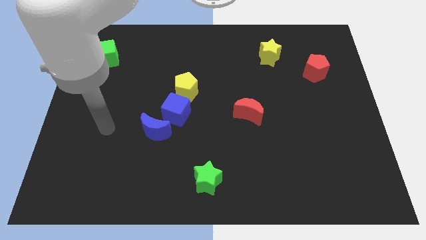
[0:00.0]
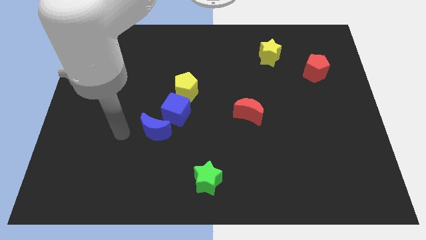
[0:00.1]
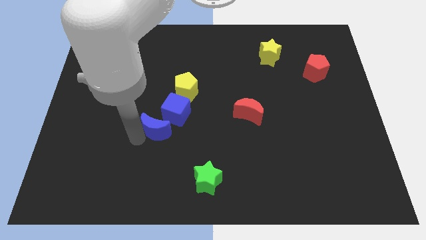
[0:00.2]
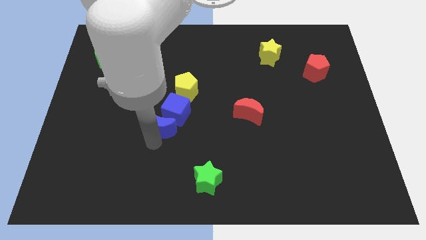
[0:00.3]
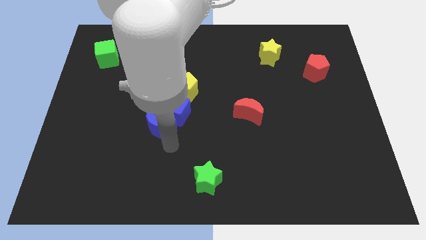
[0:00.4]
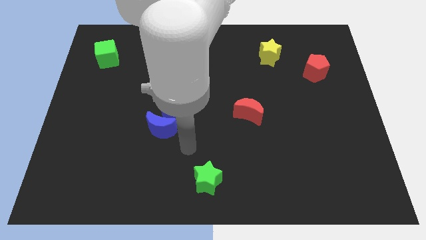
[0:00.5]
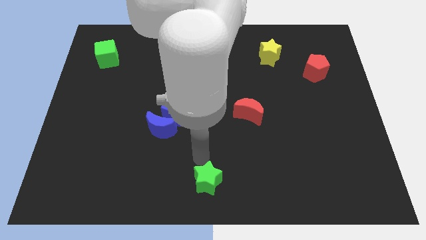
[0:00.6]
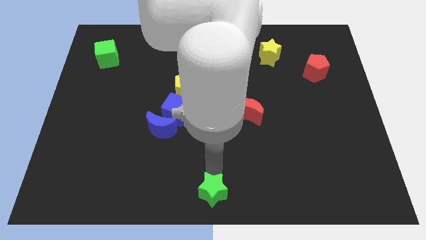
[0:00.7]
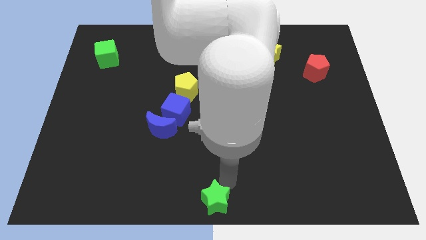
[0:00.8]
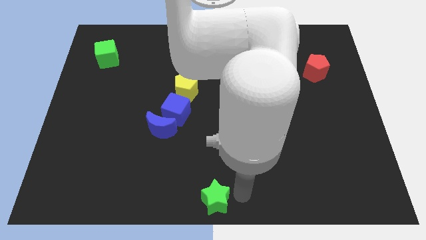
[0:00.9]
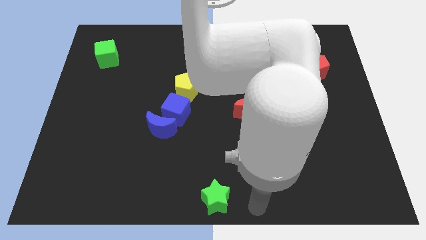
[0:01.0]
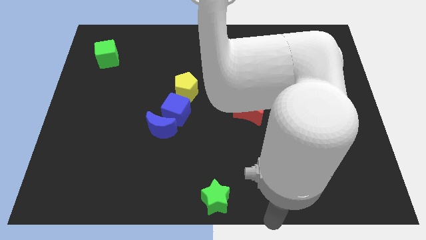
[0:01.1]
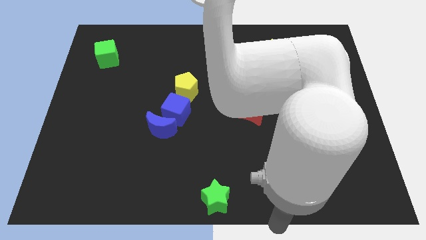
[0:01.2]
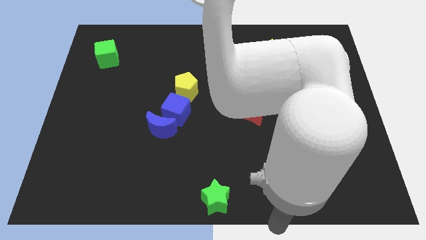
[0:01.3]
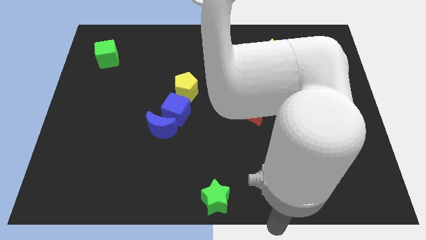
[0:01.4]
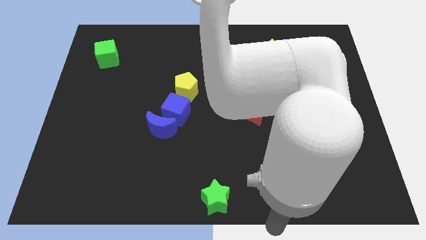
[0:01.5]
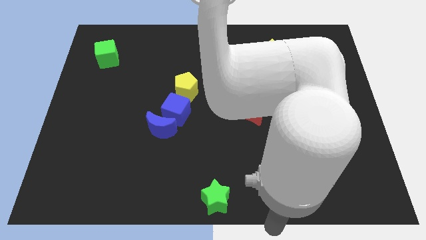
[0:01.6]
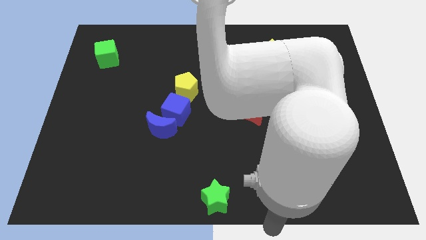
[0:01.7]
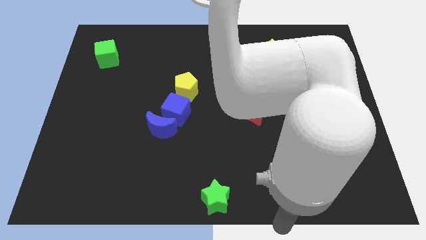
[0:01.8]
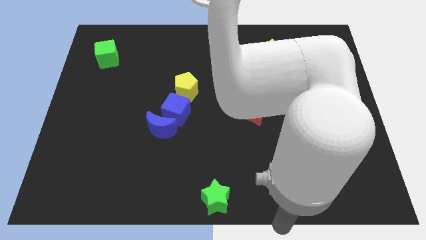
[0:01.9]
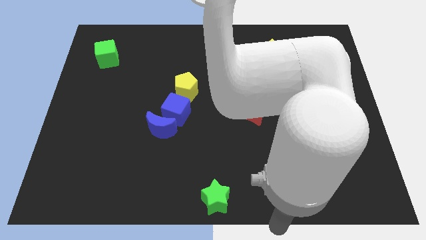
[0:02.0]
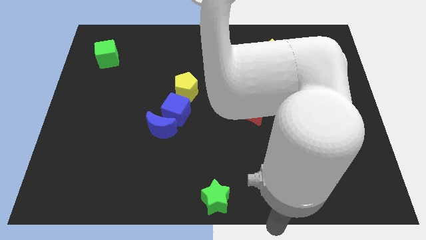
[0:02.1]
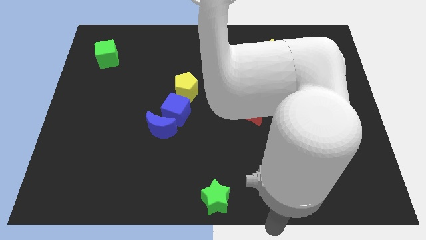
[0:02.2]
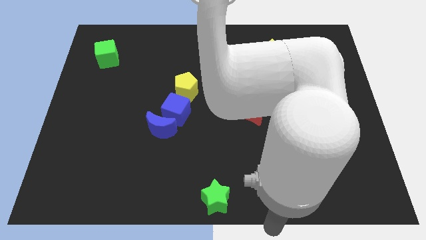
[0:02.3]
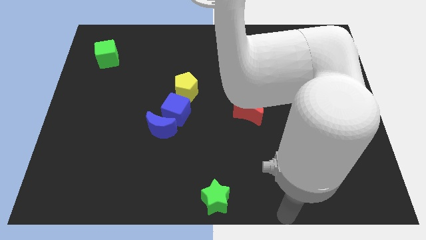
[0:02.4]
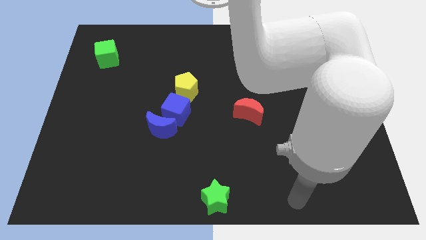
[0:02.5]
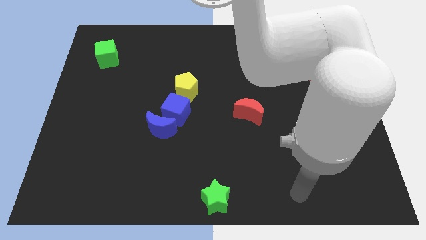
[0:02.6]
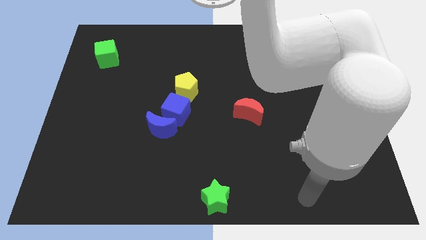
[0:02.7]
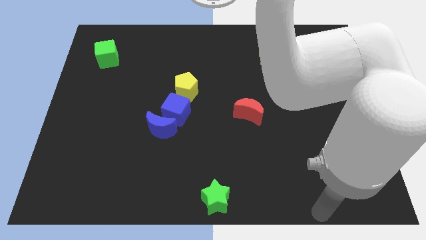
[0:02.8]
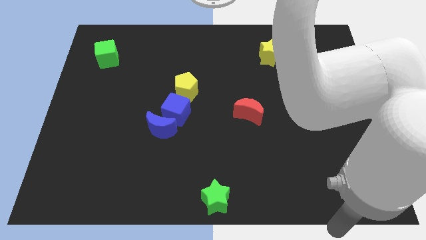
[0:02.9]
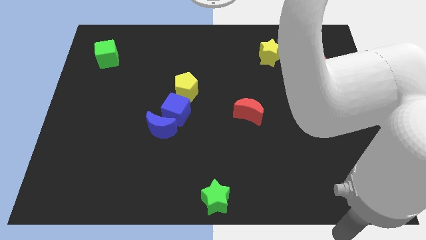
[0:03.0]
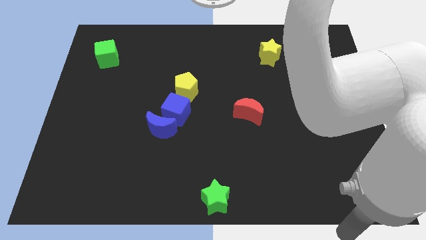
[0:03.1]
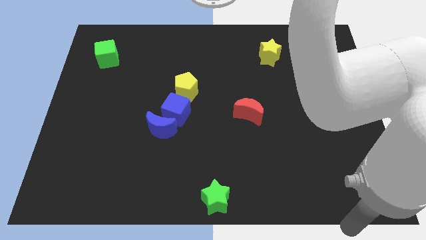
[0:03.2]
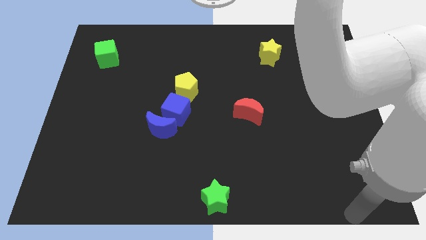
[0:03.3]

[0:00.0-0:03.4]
slightly move the green star to the bottom center of the board

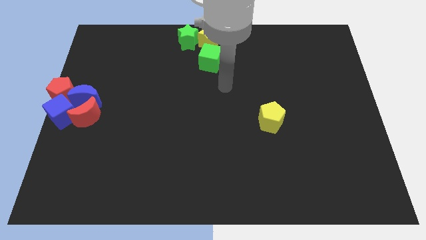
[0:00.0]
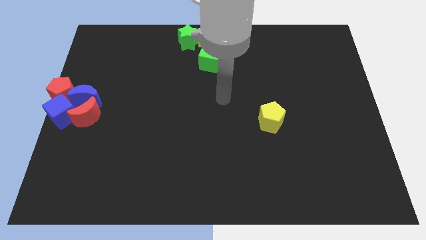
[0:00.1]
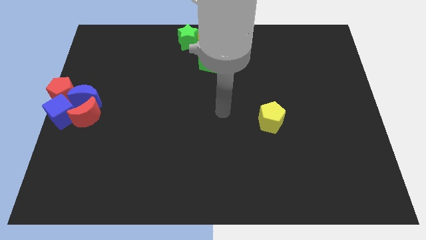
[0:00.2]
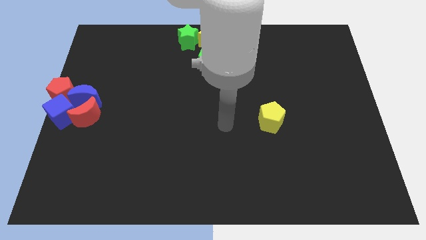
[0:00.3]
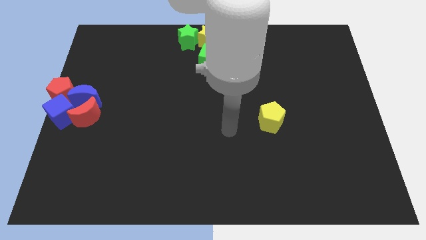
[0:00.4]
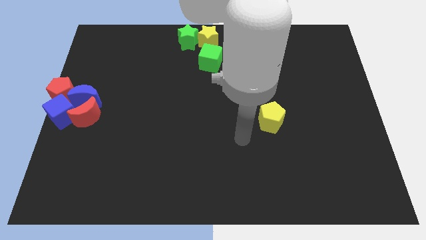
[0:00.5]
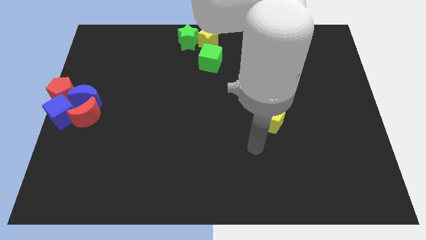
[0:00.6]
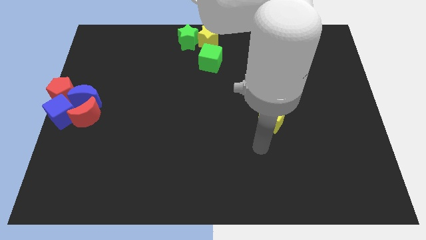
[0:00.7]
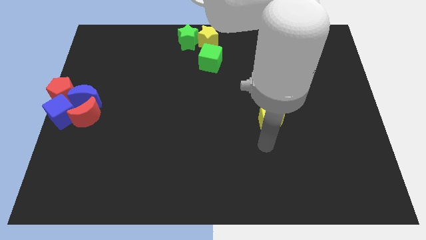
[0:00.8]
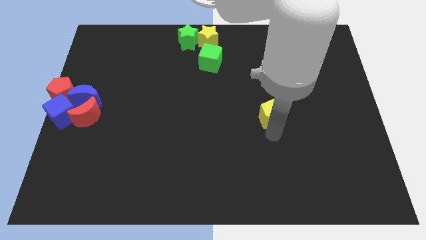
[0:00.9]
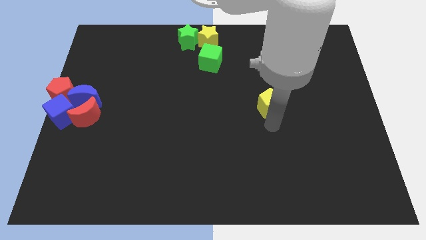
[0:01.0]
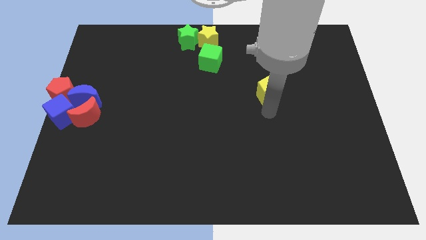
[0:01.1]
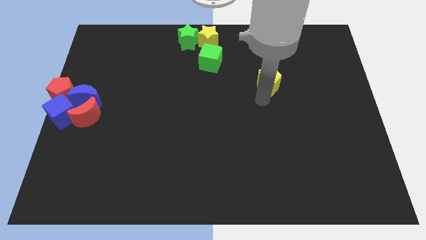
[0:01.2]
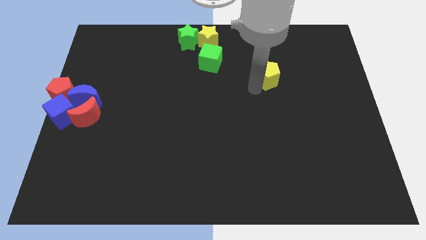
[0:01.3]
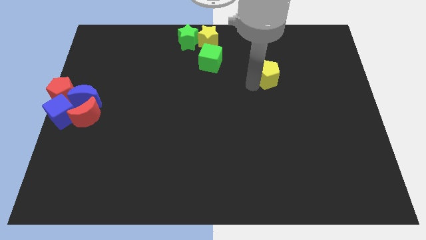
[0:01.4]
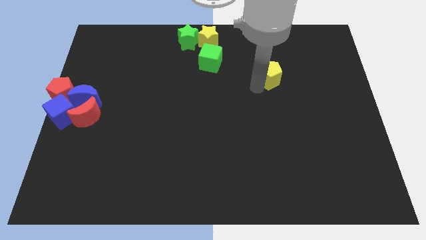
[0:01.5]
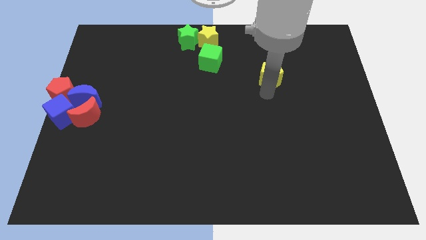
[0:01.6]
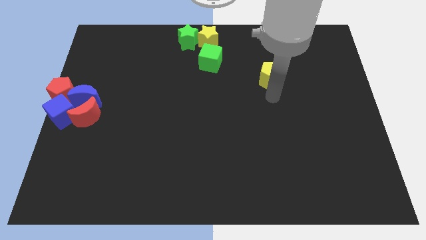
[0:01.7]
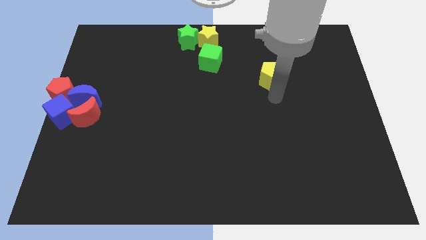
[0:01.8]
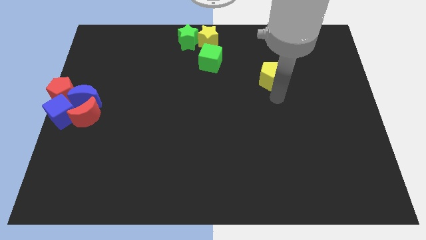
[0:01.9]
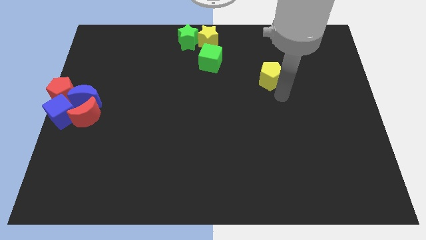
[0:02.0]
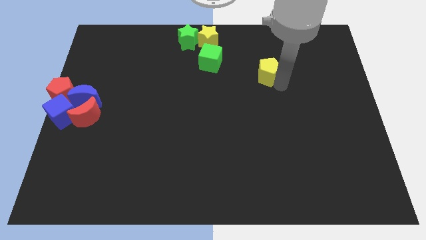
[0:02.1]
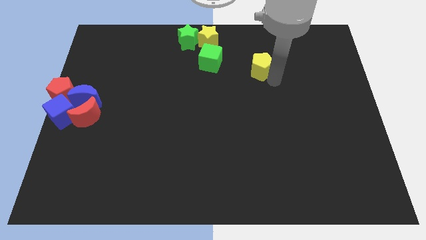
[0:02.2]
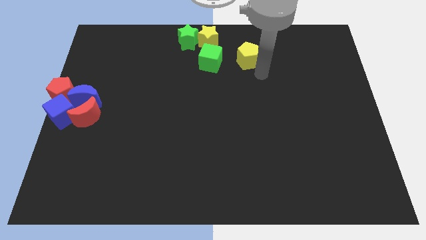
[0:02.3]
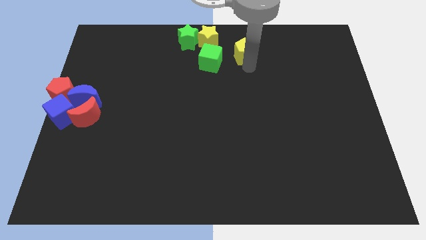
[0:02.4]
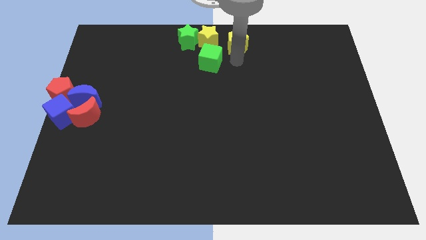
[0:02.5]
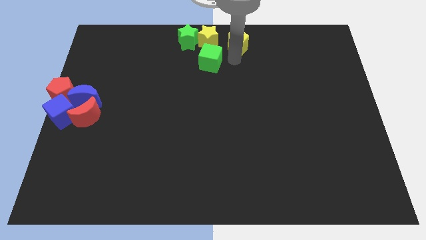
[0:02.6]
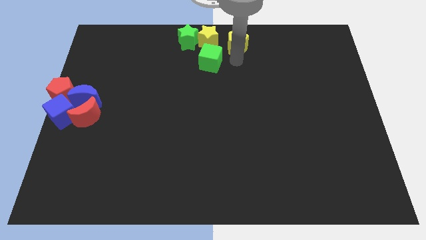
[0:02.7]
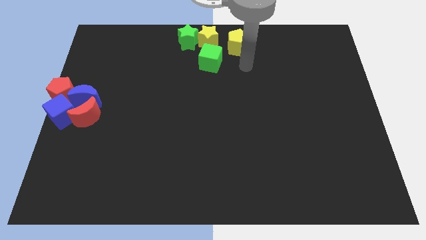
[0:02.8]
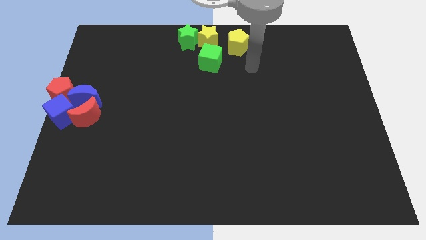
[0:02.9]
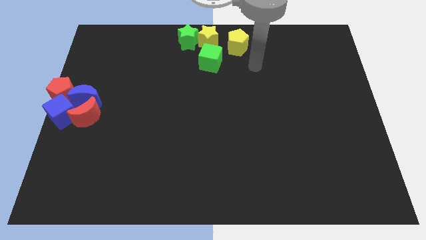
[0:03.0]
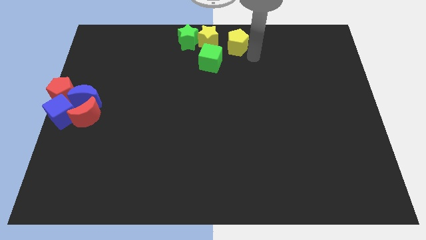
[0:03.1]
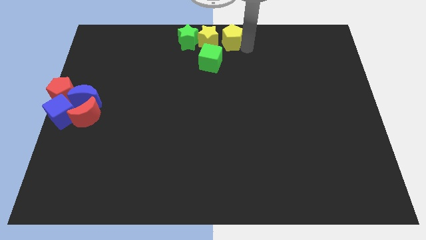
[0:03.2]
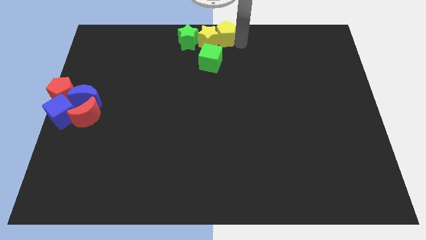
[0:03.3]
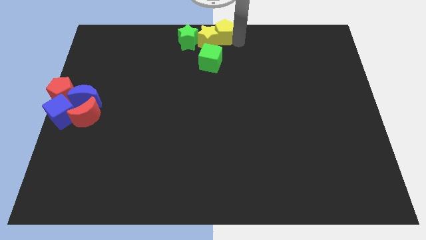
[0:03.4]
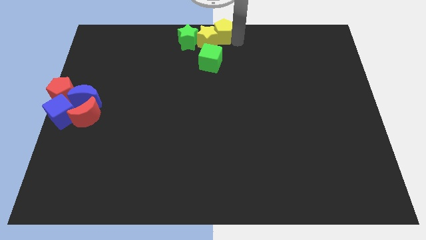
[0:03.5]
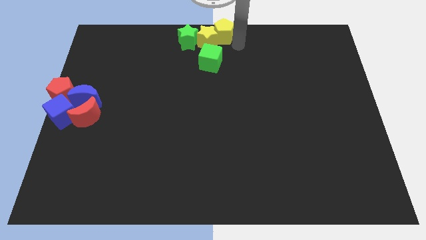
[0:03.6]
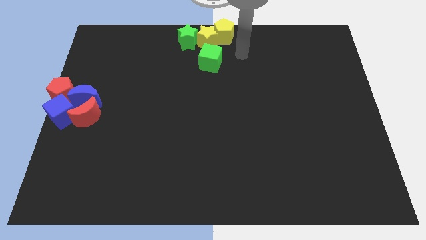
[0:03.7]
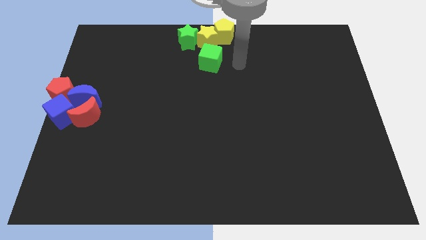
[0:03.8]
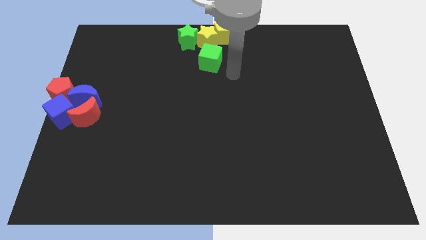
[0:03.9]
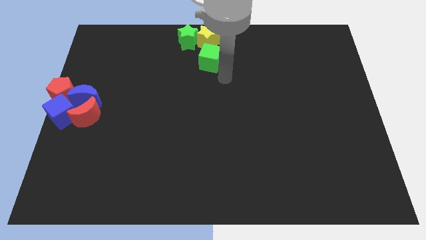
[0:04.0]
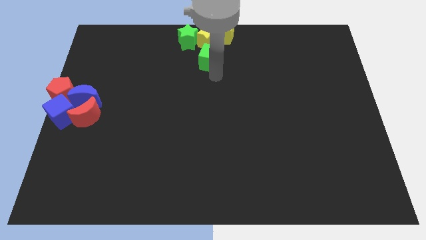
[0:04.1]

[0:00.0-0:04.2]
move the yellow pentagon to the top center of the board

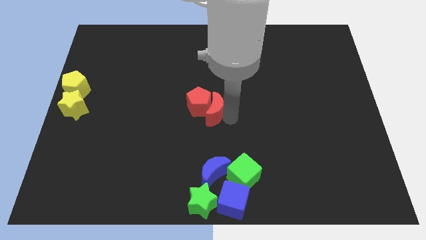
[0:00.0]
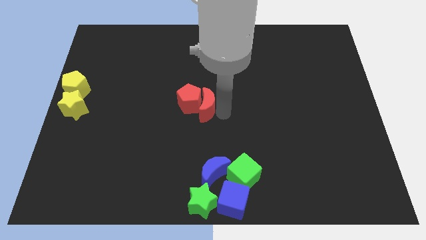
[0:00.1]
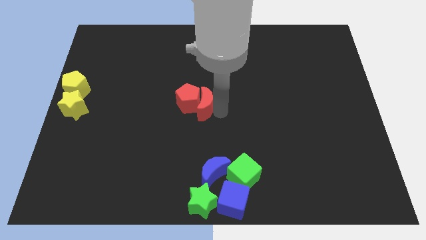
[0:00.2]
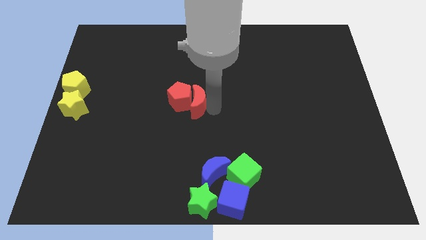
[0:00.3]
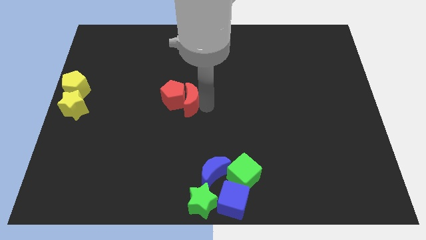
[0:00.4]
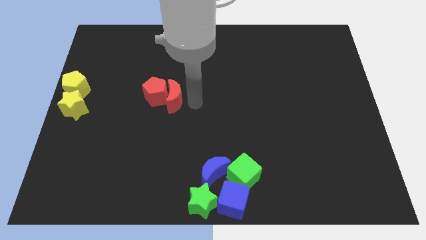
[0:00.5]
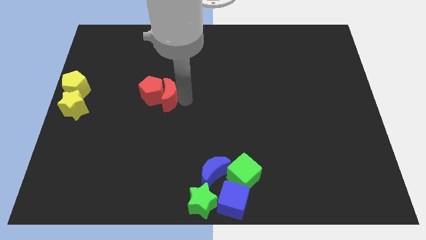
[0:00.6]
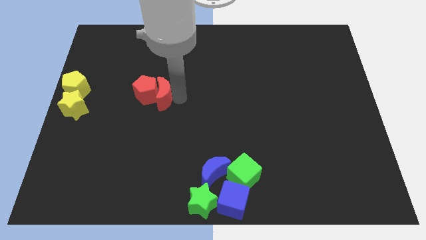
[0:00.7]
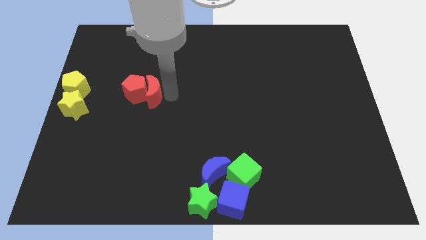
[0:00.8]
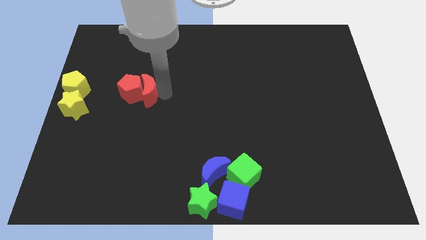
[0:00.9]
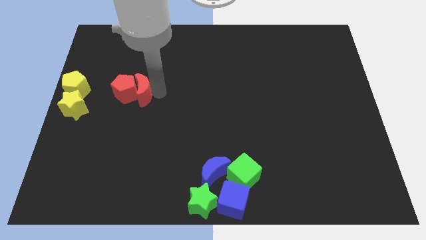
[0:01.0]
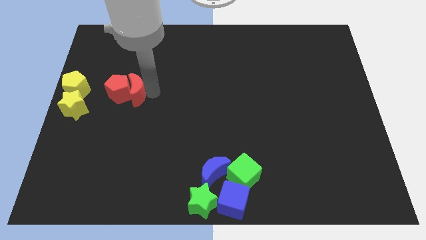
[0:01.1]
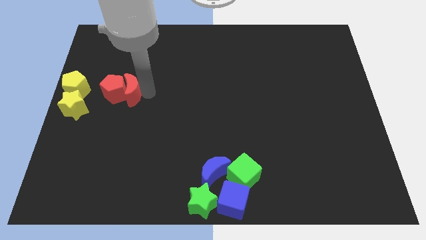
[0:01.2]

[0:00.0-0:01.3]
push red pentagon and red moon towards the yellow pentagon and the yellow star
